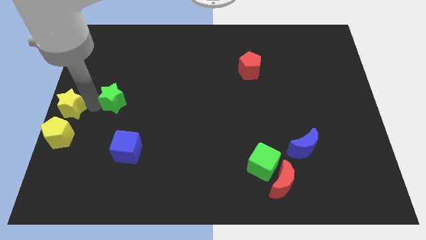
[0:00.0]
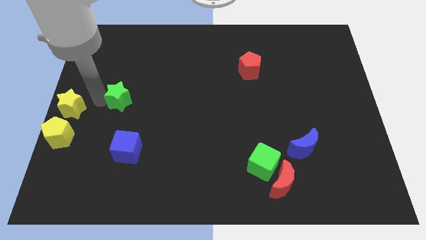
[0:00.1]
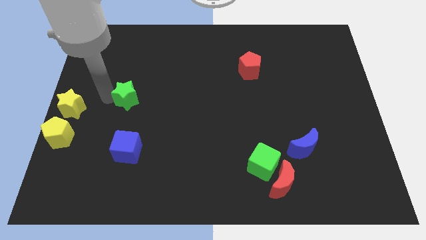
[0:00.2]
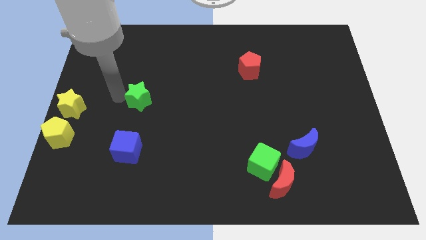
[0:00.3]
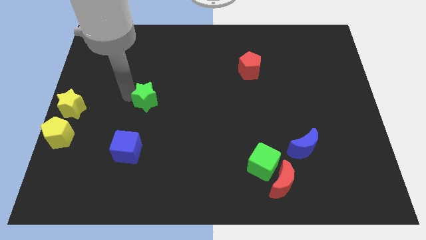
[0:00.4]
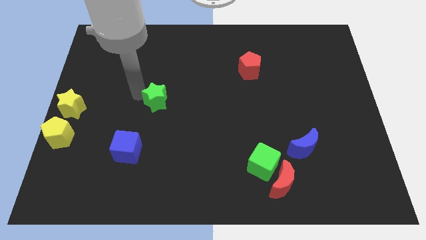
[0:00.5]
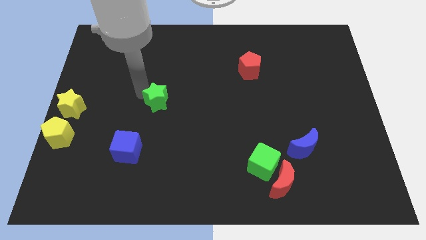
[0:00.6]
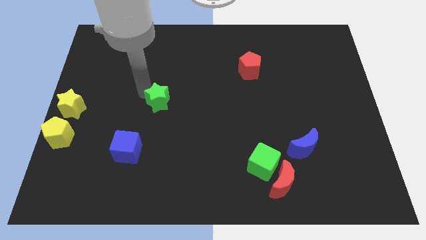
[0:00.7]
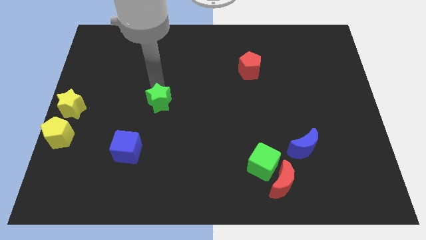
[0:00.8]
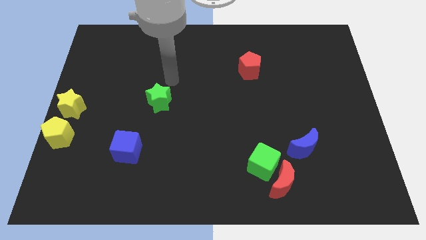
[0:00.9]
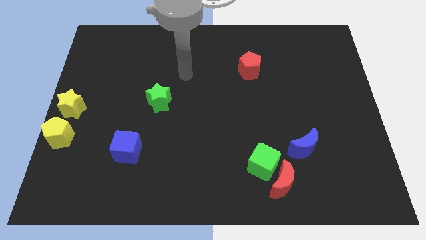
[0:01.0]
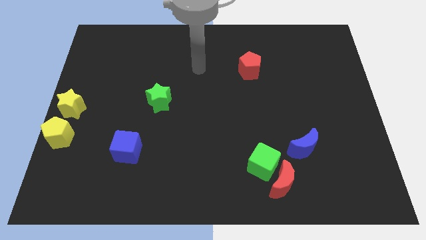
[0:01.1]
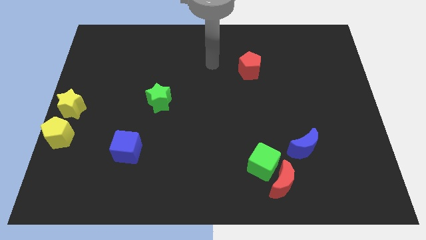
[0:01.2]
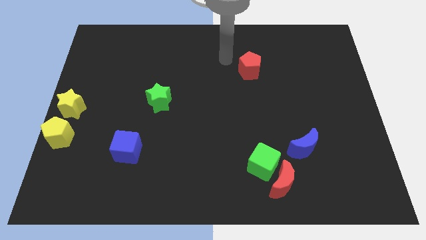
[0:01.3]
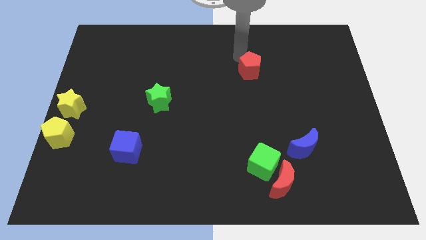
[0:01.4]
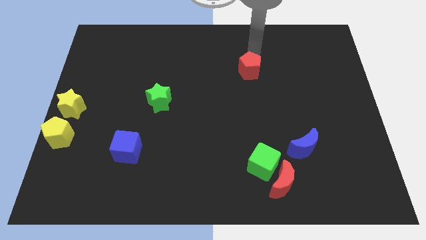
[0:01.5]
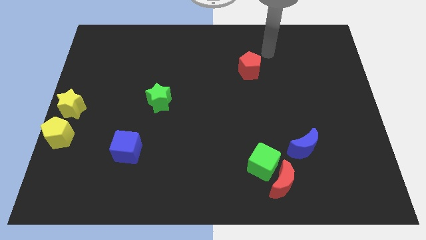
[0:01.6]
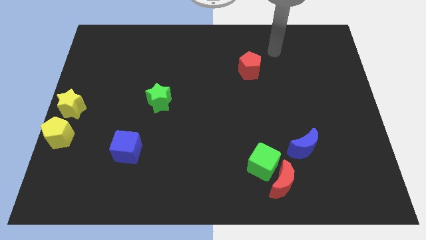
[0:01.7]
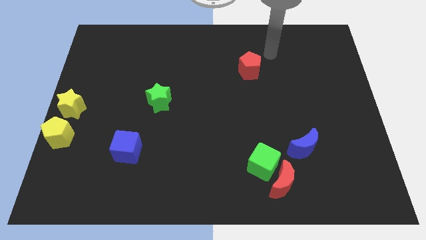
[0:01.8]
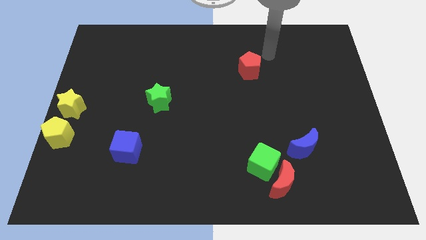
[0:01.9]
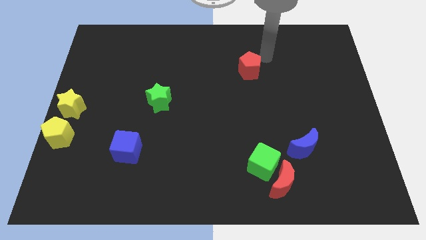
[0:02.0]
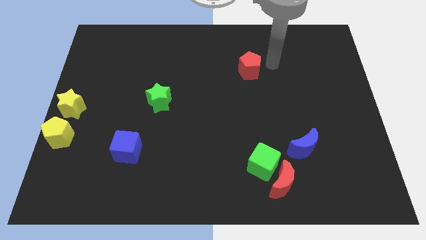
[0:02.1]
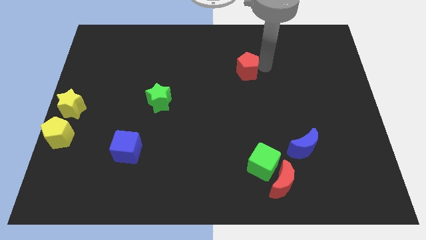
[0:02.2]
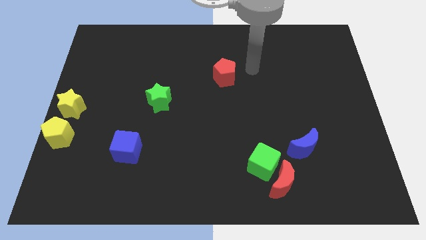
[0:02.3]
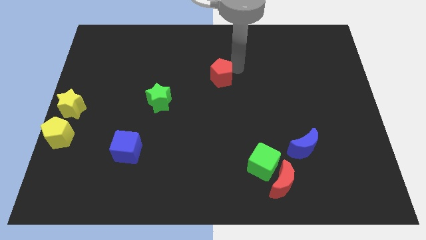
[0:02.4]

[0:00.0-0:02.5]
slide the green star slightly to the right

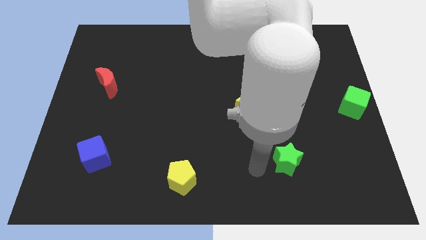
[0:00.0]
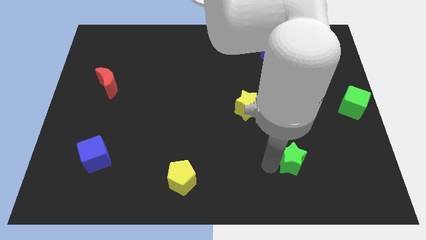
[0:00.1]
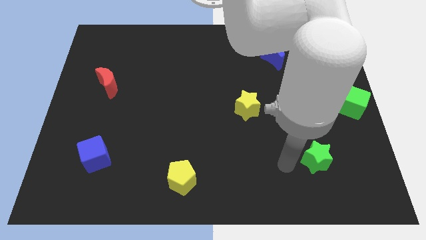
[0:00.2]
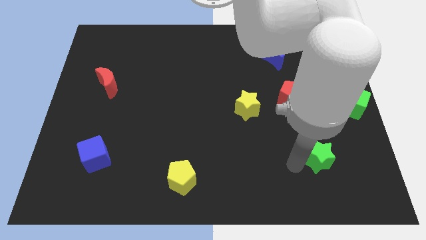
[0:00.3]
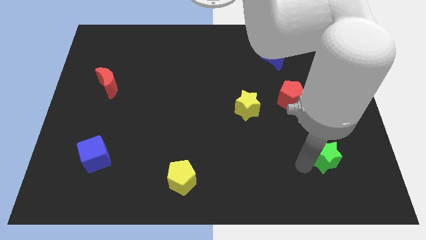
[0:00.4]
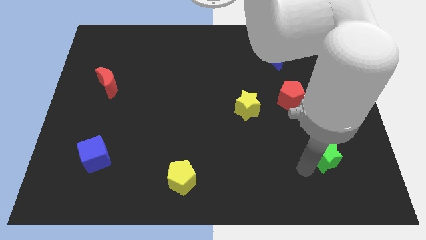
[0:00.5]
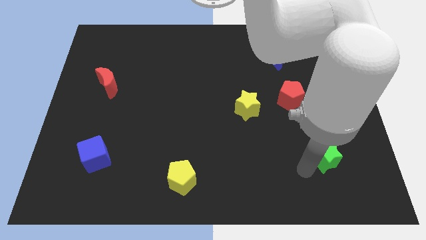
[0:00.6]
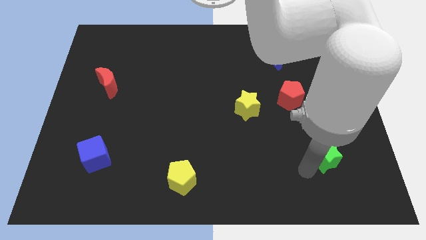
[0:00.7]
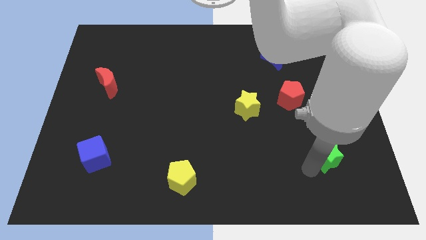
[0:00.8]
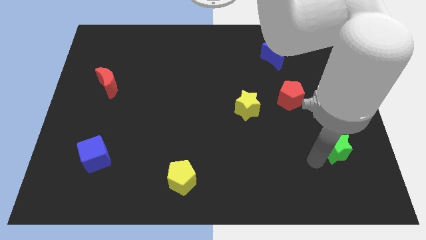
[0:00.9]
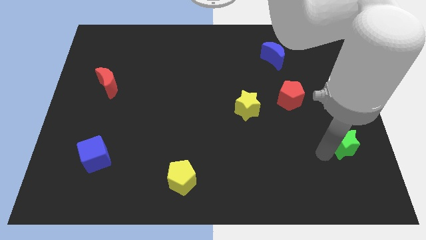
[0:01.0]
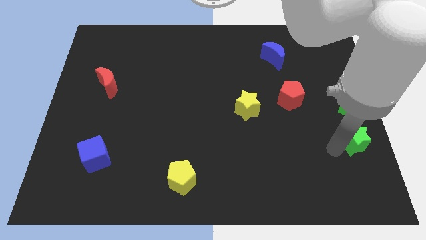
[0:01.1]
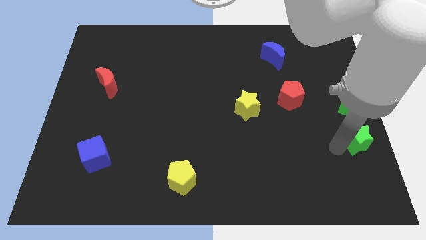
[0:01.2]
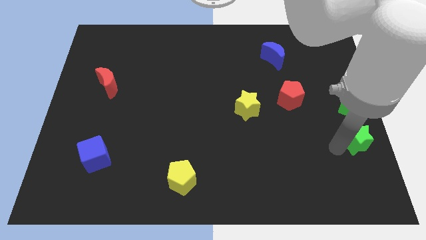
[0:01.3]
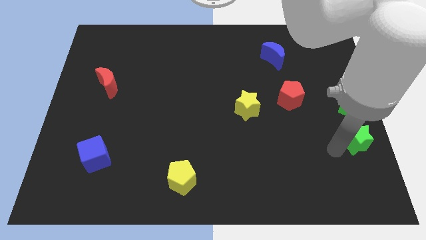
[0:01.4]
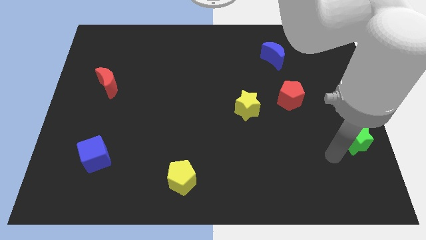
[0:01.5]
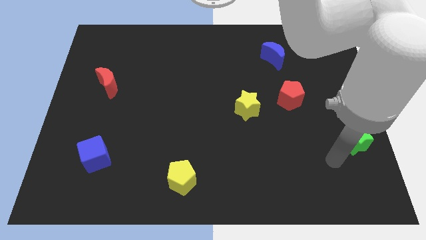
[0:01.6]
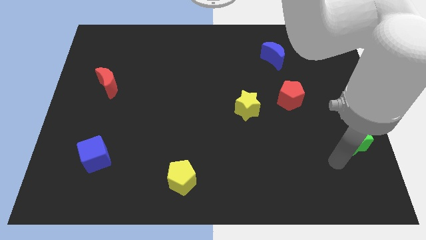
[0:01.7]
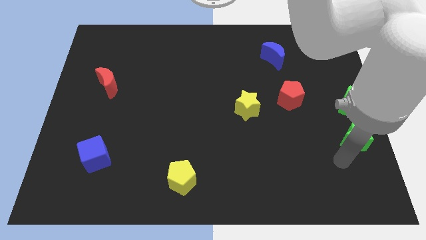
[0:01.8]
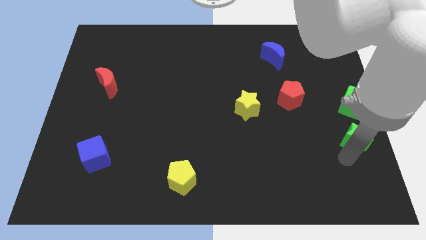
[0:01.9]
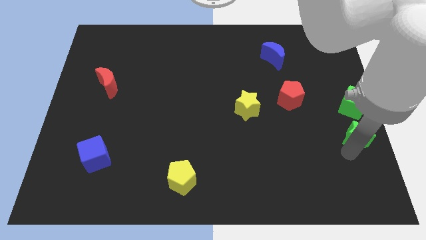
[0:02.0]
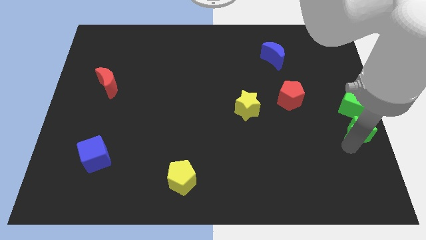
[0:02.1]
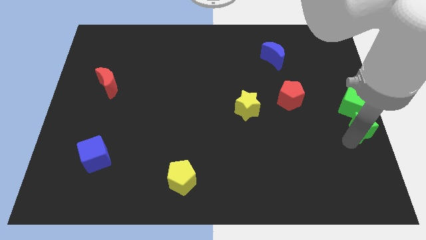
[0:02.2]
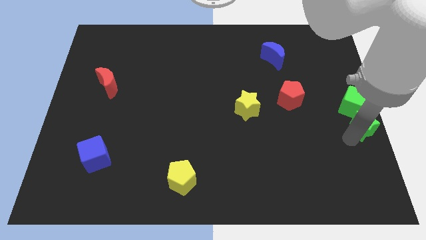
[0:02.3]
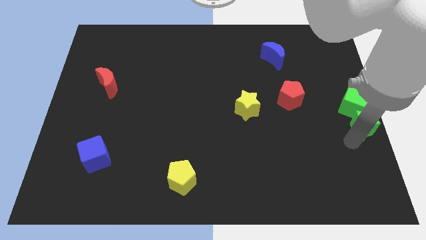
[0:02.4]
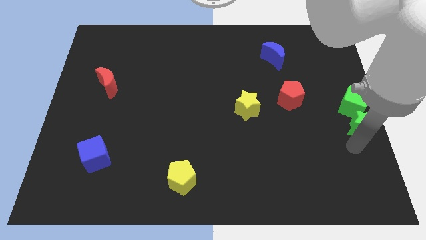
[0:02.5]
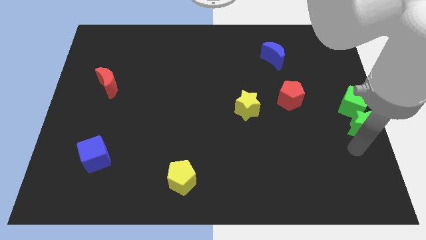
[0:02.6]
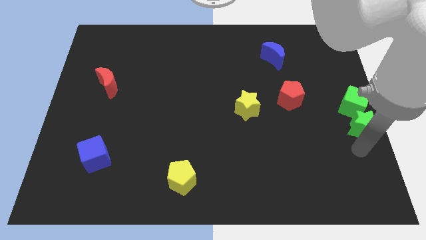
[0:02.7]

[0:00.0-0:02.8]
place the green star at the bottom of green cube

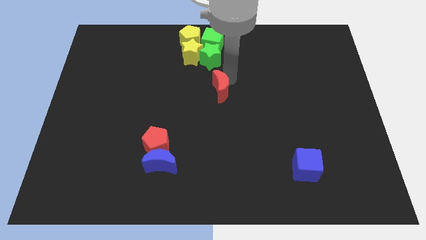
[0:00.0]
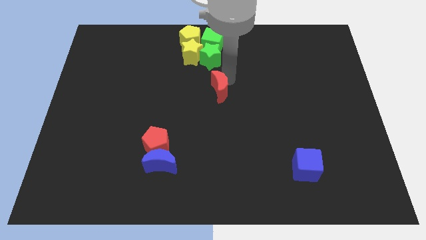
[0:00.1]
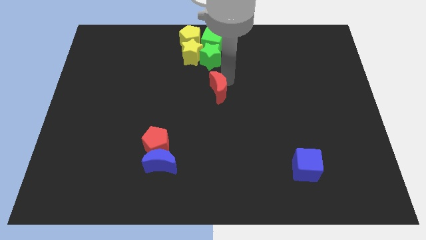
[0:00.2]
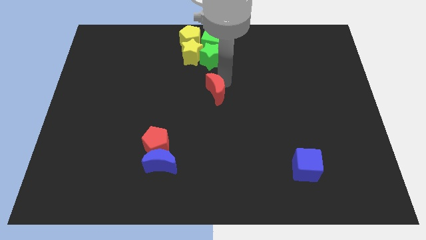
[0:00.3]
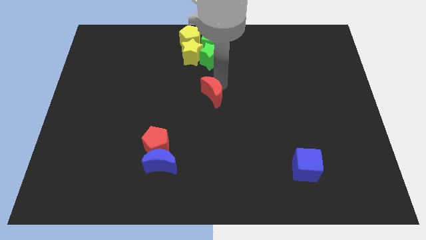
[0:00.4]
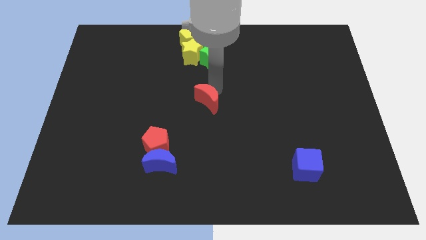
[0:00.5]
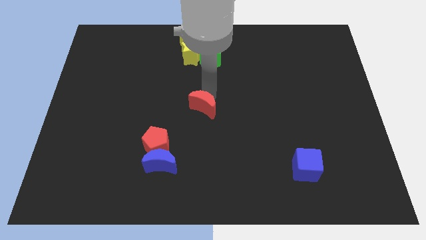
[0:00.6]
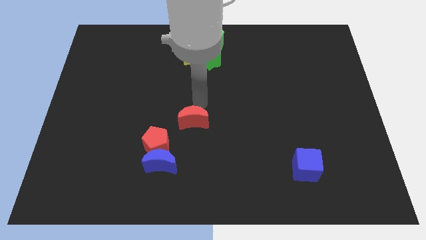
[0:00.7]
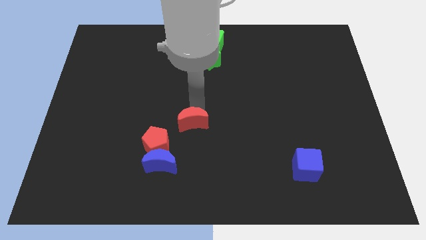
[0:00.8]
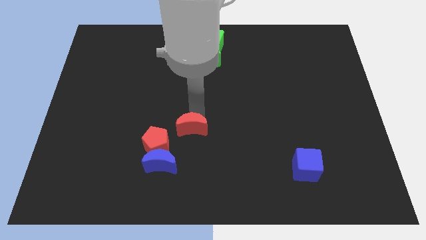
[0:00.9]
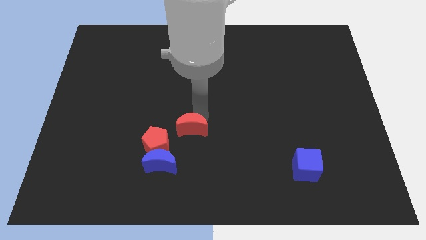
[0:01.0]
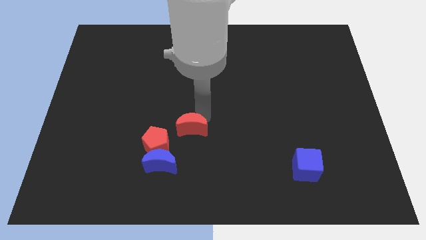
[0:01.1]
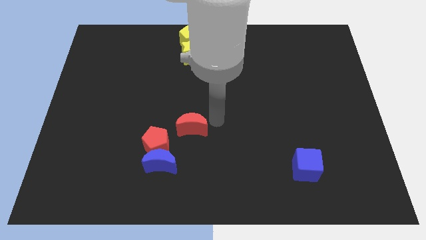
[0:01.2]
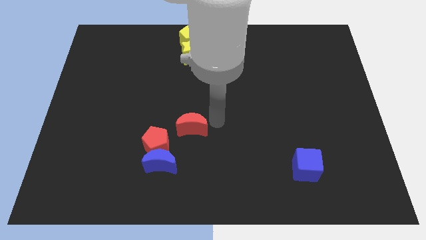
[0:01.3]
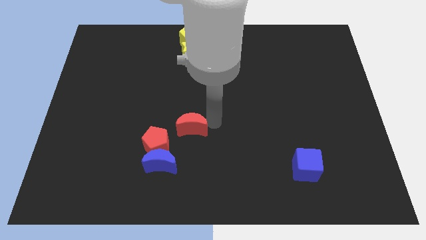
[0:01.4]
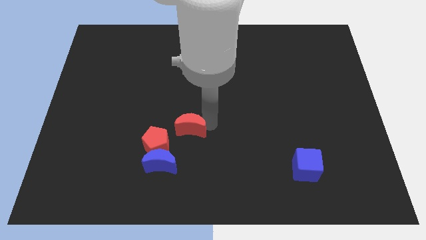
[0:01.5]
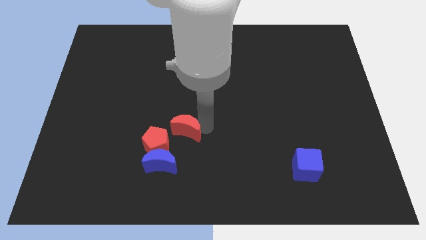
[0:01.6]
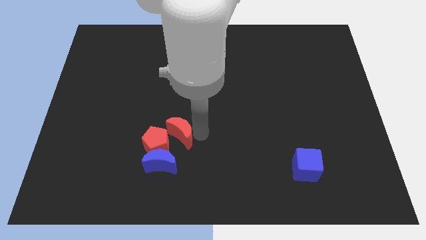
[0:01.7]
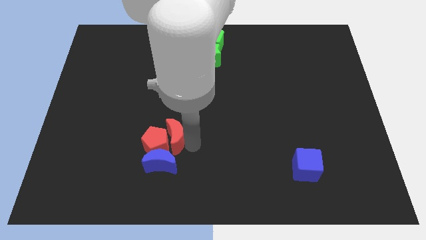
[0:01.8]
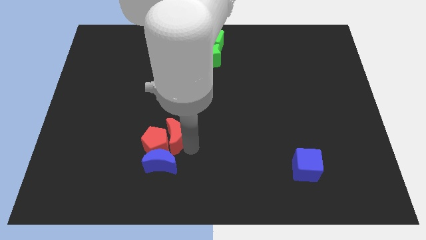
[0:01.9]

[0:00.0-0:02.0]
slide the red moon into the red pentagon

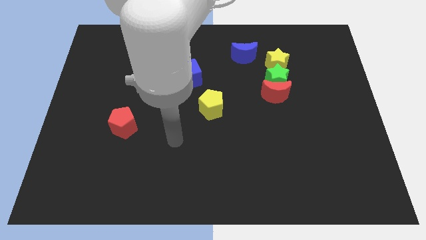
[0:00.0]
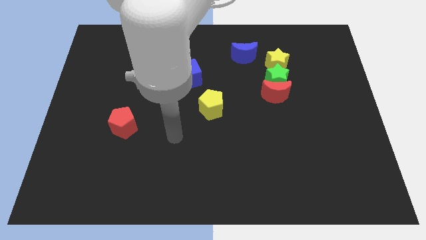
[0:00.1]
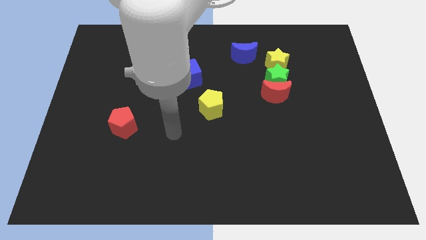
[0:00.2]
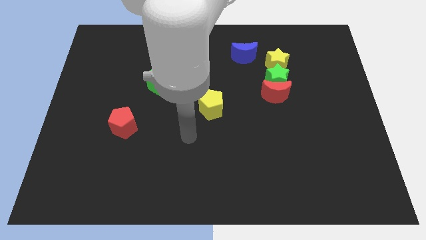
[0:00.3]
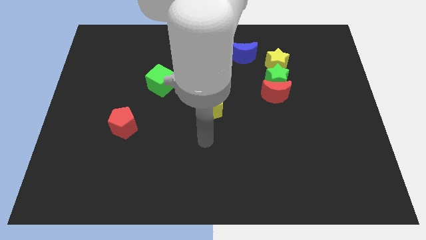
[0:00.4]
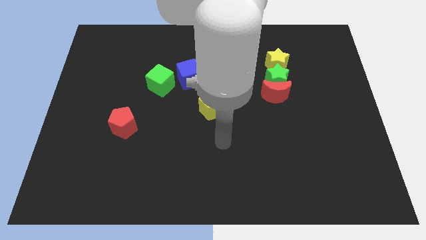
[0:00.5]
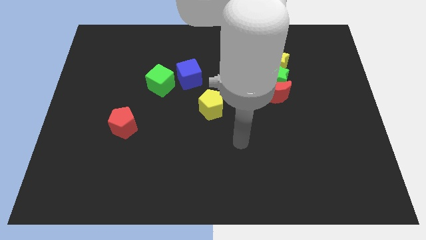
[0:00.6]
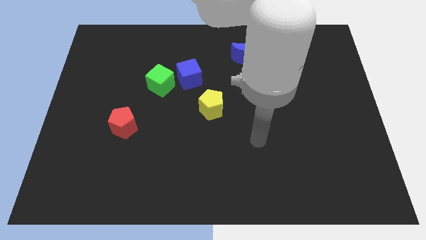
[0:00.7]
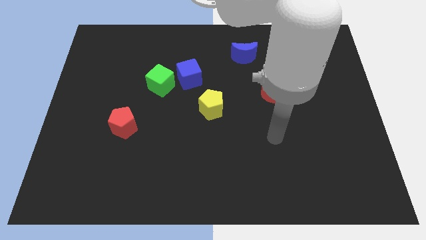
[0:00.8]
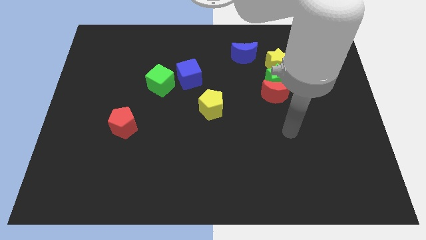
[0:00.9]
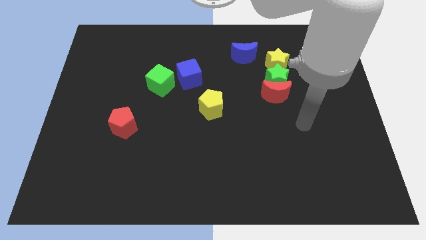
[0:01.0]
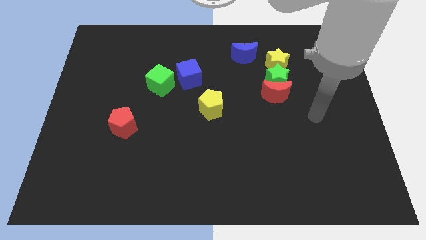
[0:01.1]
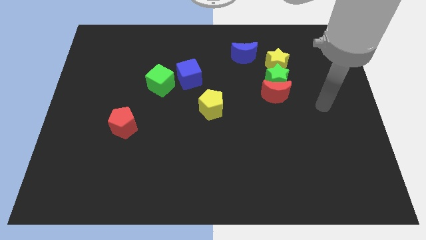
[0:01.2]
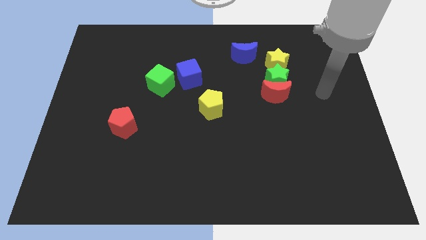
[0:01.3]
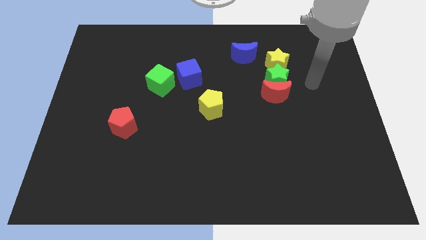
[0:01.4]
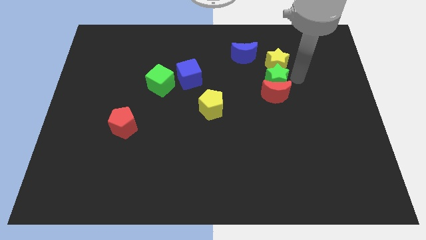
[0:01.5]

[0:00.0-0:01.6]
move your arm to the right of green star
